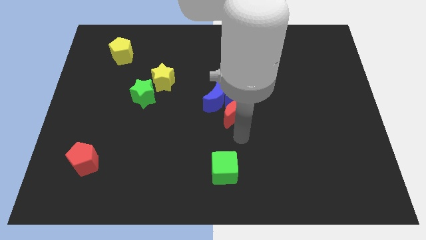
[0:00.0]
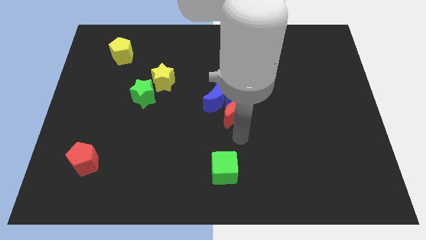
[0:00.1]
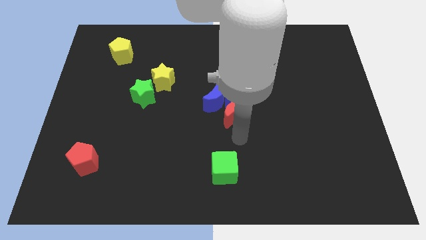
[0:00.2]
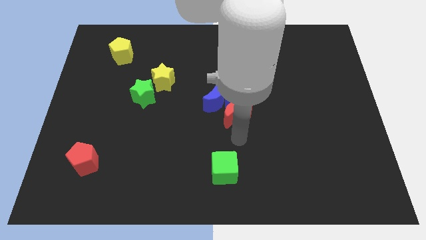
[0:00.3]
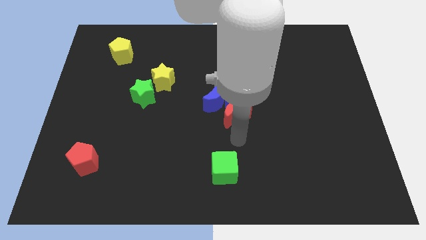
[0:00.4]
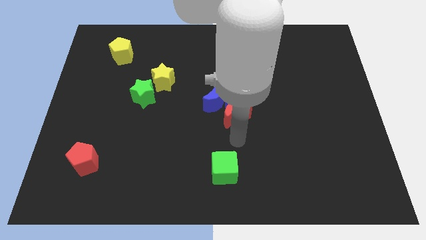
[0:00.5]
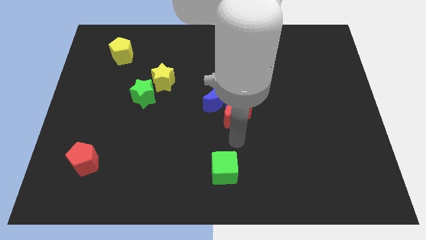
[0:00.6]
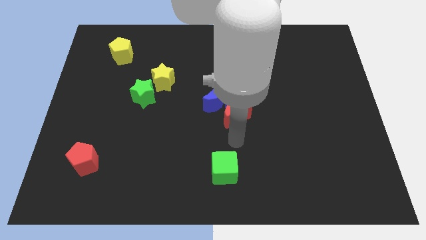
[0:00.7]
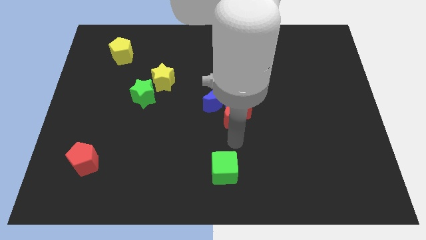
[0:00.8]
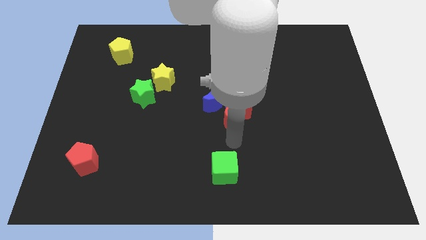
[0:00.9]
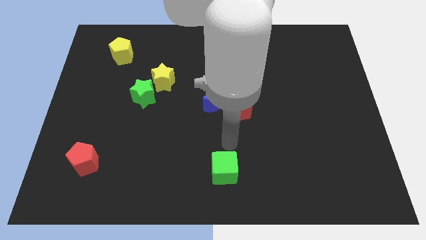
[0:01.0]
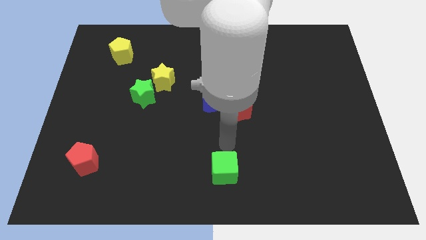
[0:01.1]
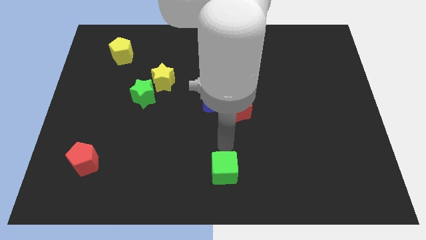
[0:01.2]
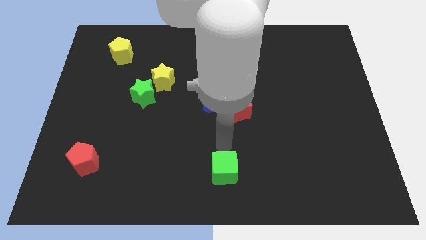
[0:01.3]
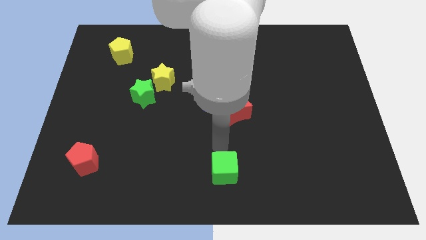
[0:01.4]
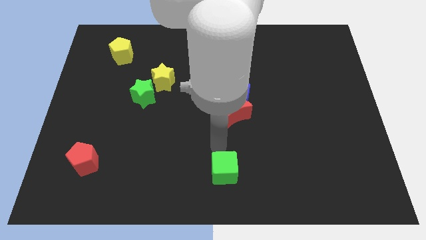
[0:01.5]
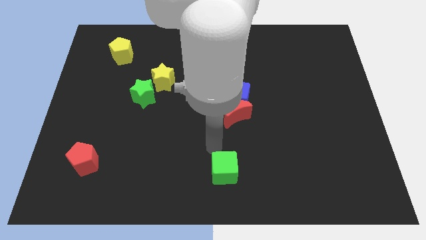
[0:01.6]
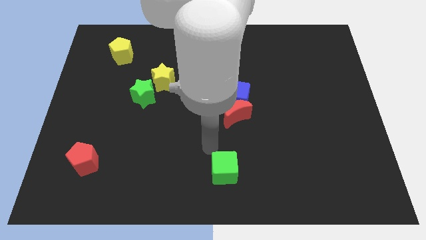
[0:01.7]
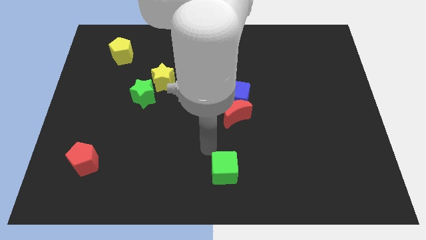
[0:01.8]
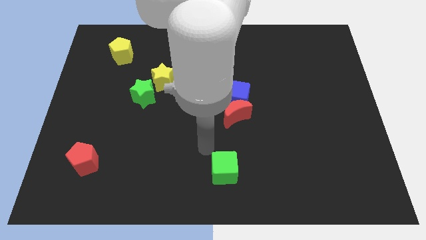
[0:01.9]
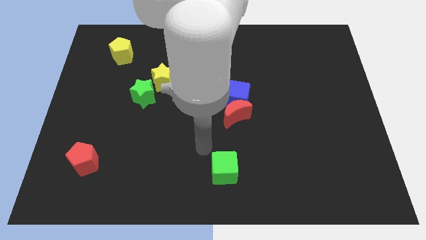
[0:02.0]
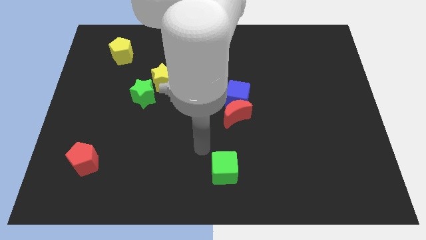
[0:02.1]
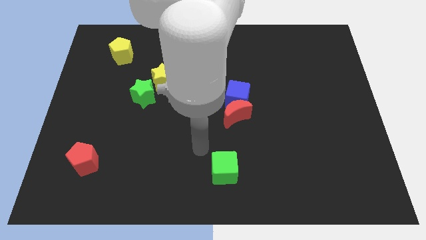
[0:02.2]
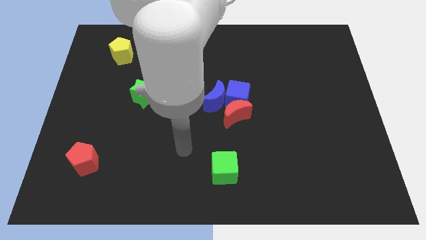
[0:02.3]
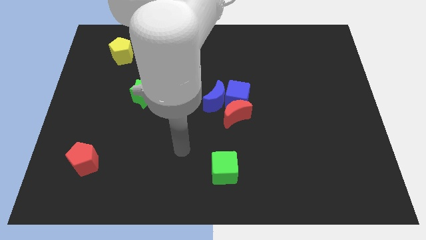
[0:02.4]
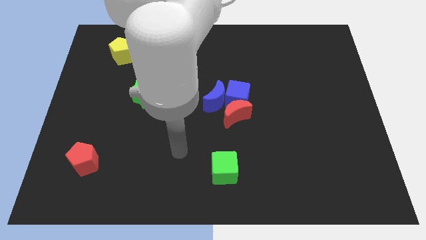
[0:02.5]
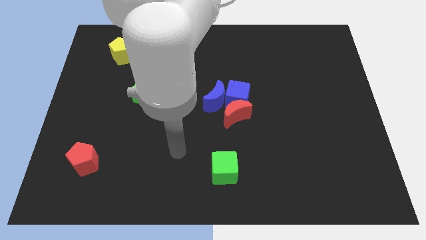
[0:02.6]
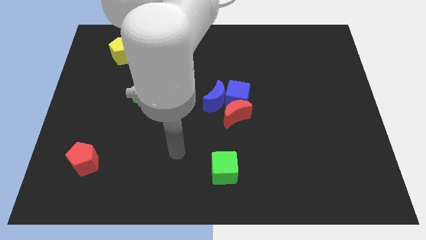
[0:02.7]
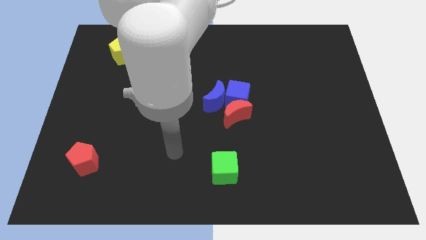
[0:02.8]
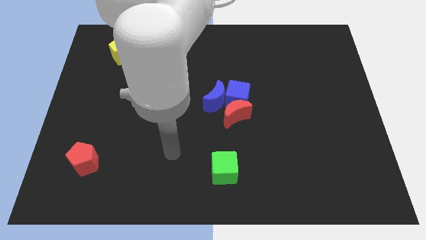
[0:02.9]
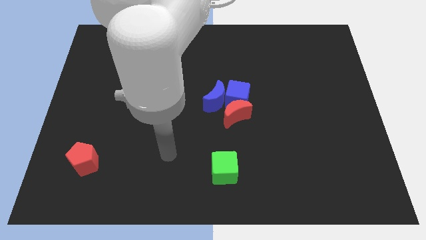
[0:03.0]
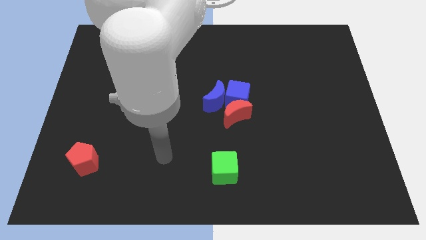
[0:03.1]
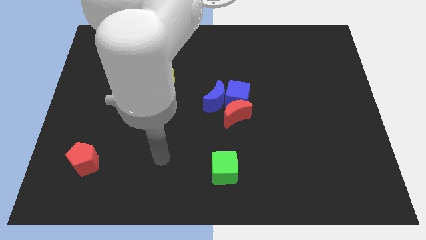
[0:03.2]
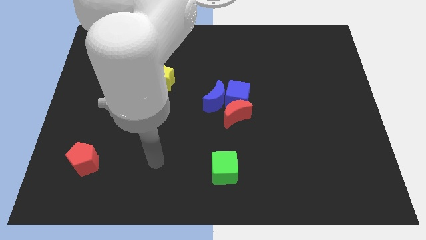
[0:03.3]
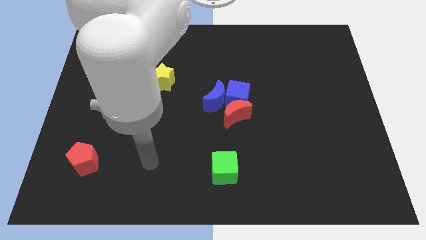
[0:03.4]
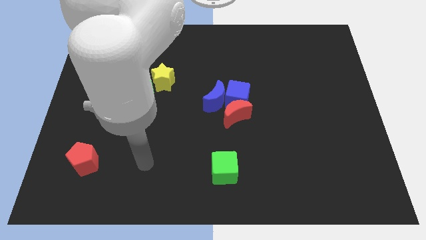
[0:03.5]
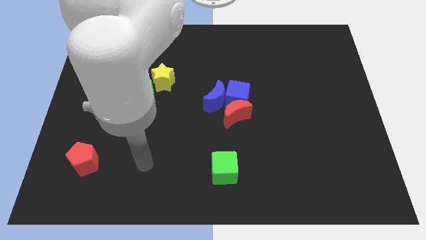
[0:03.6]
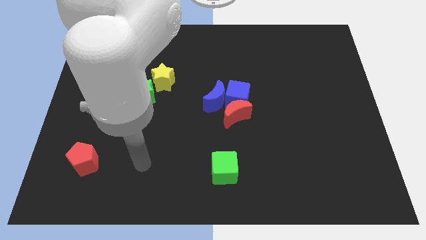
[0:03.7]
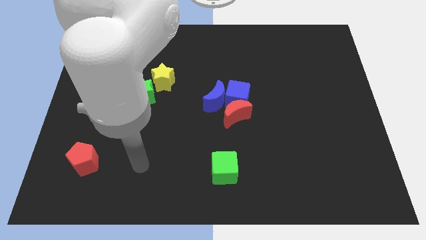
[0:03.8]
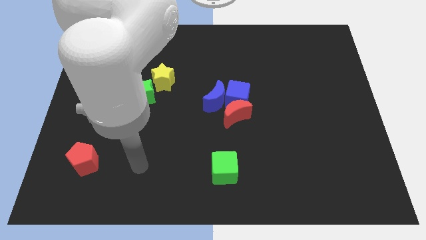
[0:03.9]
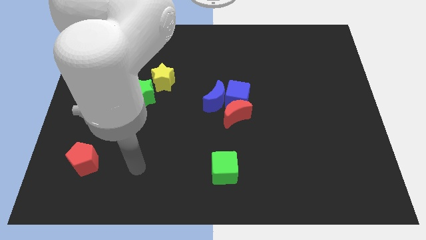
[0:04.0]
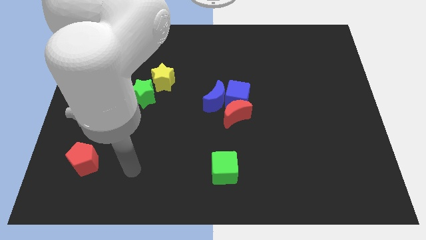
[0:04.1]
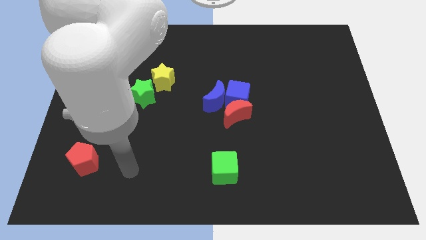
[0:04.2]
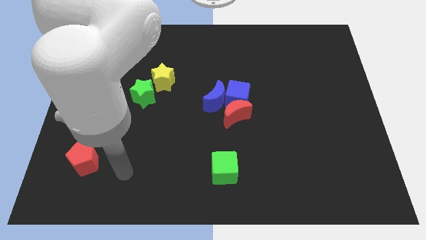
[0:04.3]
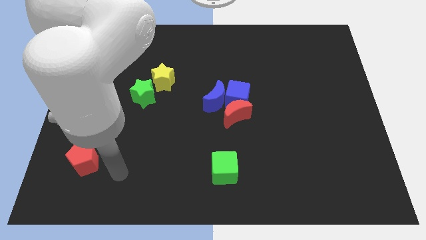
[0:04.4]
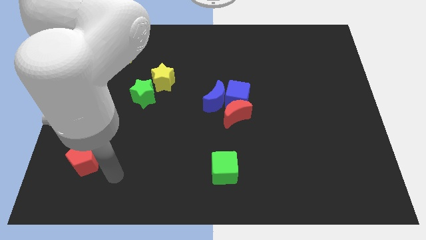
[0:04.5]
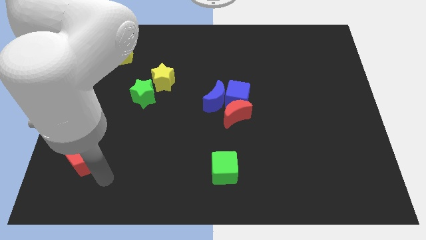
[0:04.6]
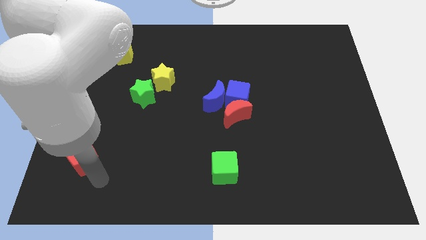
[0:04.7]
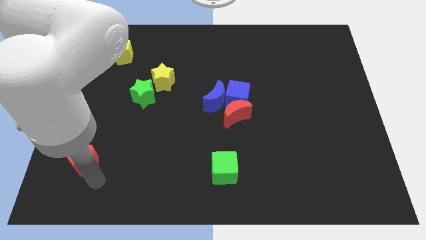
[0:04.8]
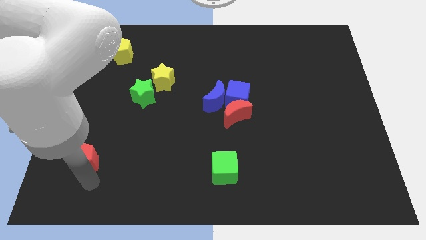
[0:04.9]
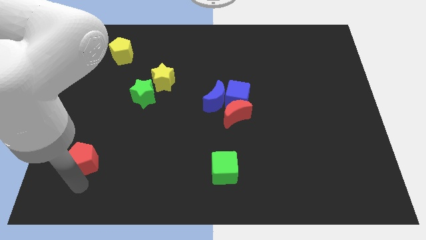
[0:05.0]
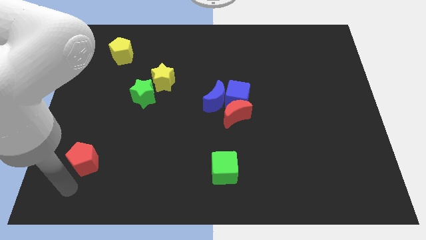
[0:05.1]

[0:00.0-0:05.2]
place your arm below the red pentagon

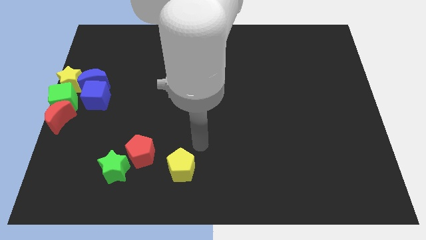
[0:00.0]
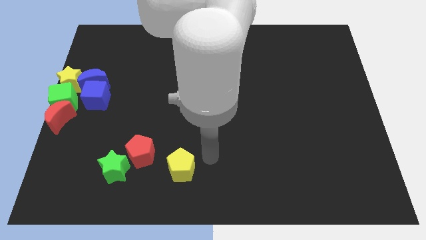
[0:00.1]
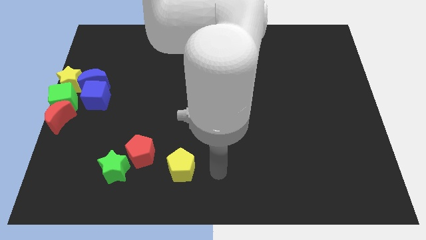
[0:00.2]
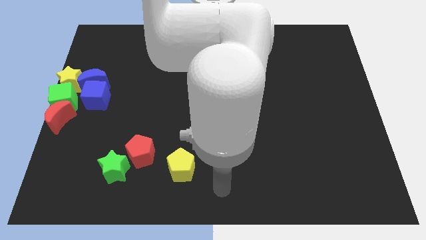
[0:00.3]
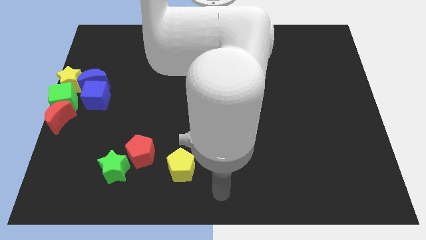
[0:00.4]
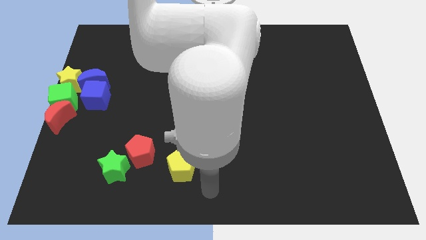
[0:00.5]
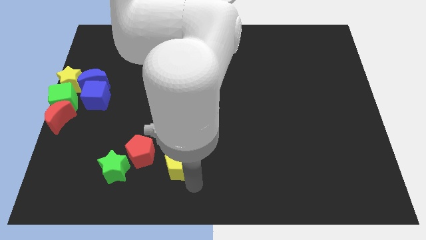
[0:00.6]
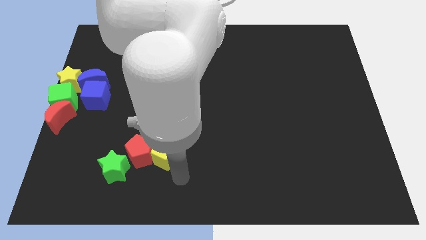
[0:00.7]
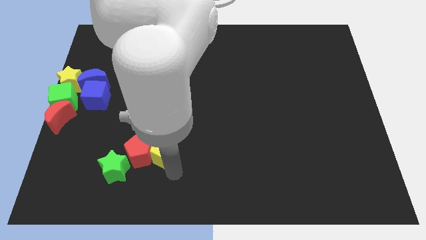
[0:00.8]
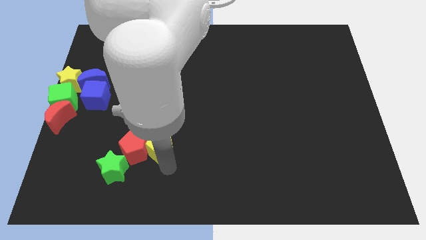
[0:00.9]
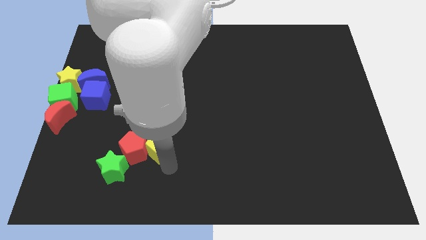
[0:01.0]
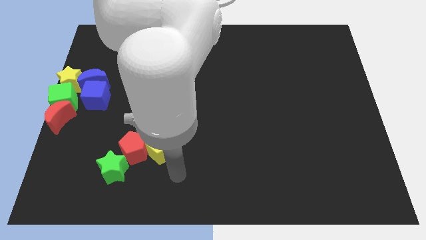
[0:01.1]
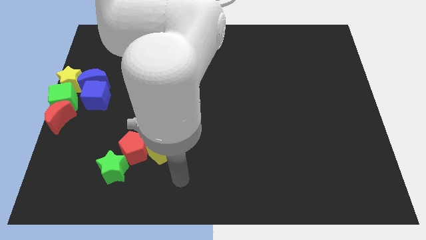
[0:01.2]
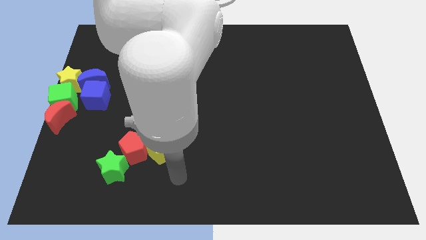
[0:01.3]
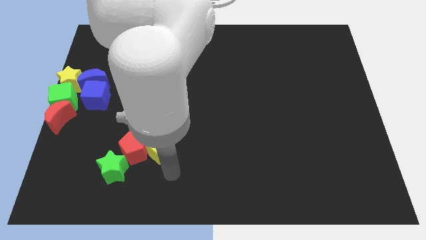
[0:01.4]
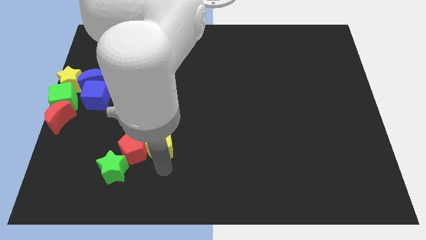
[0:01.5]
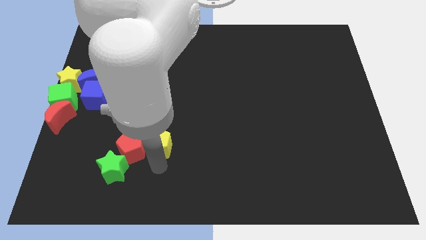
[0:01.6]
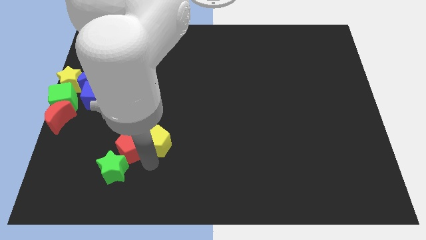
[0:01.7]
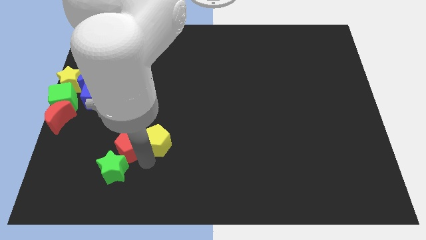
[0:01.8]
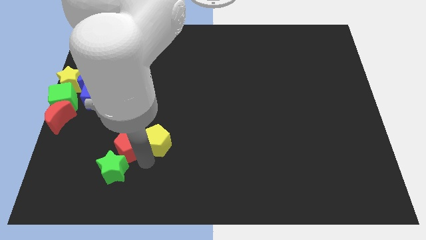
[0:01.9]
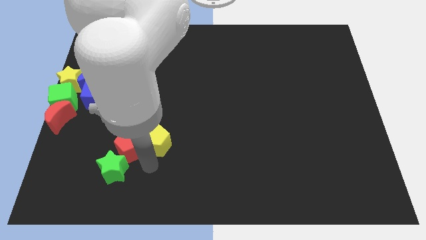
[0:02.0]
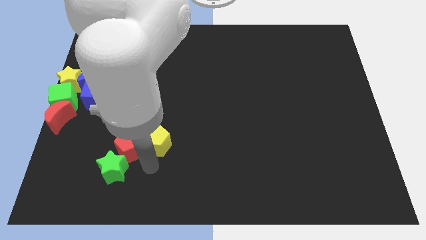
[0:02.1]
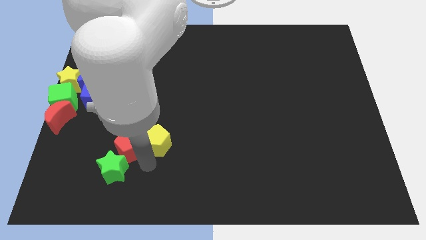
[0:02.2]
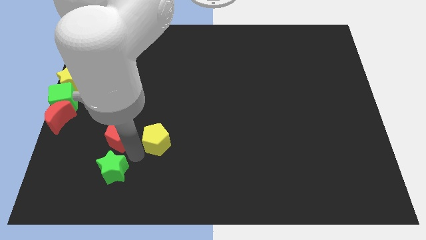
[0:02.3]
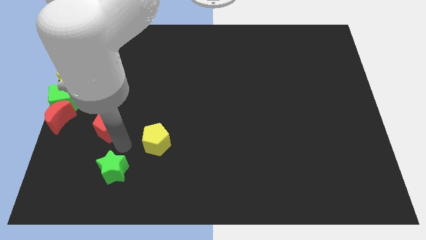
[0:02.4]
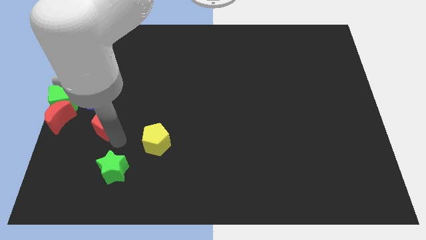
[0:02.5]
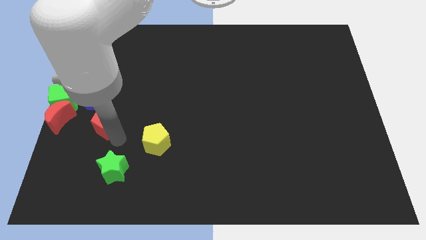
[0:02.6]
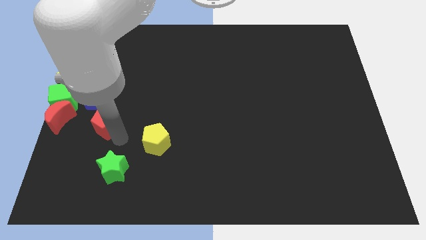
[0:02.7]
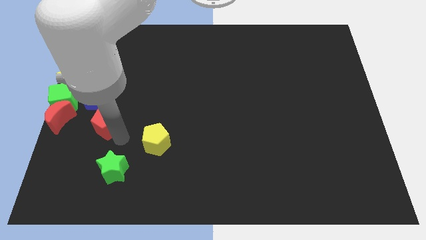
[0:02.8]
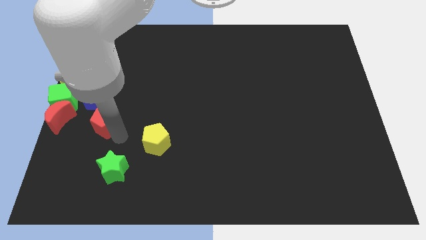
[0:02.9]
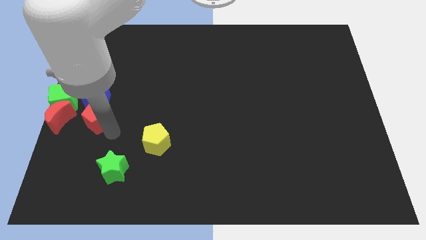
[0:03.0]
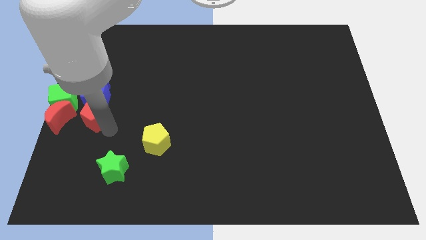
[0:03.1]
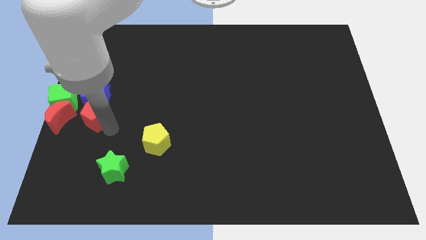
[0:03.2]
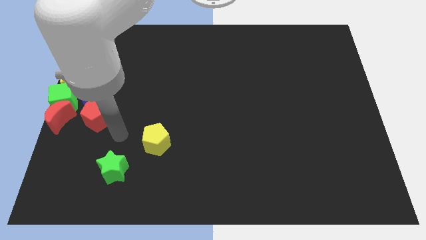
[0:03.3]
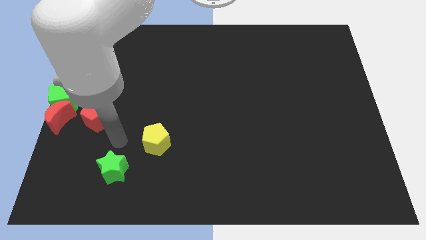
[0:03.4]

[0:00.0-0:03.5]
make a triangle out of green star red and the yellow pentagon

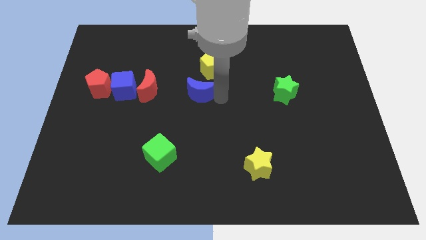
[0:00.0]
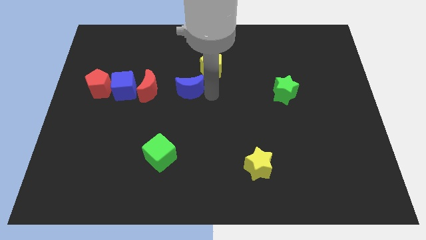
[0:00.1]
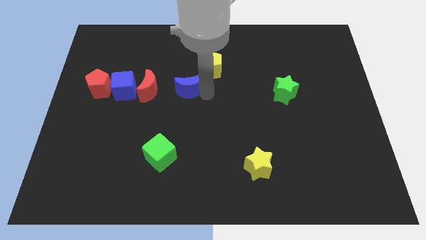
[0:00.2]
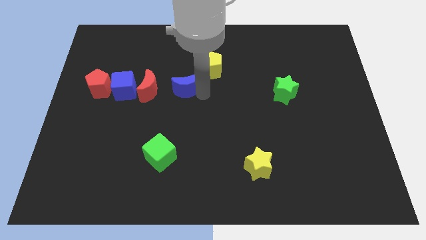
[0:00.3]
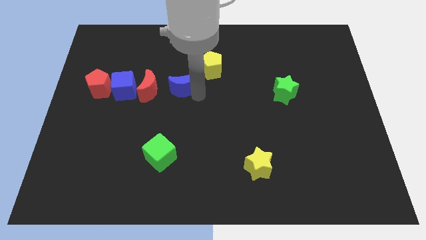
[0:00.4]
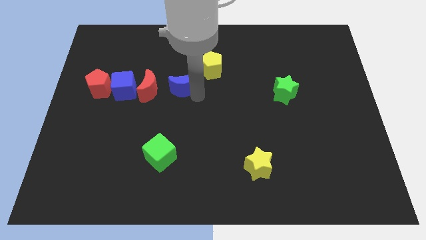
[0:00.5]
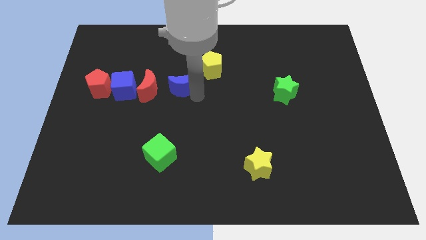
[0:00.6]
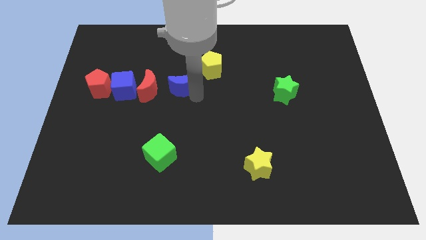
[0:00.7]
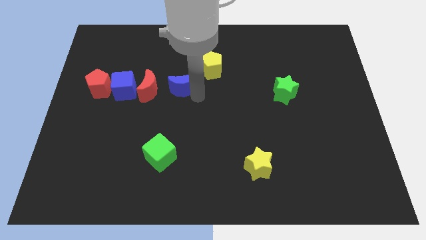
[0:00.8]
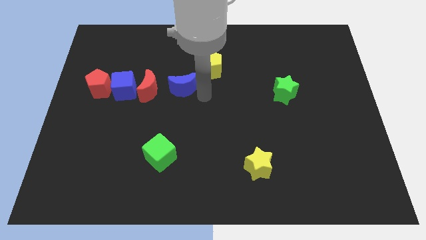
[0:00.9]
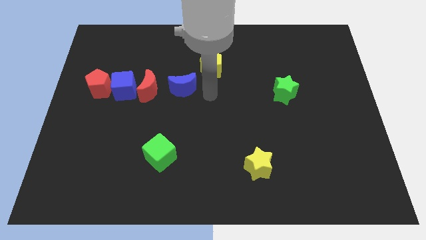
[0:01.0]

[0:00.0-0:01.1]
move the blue moon to the right of the red moon
